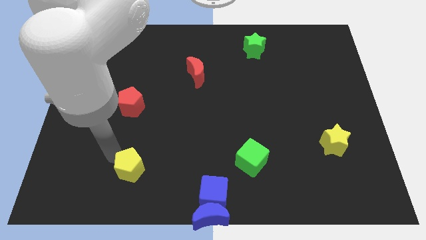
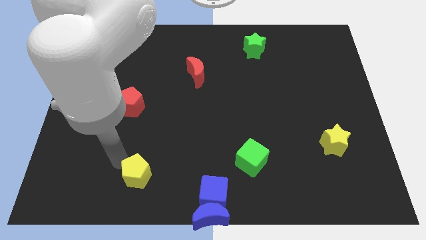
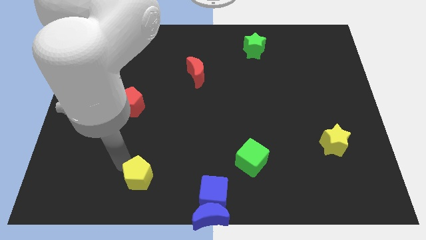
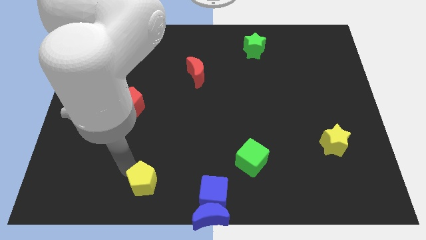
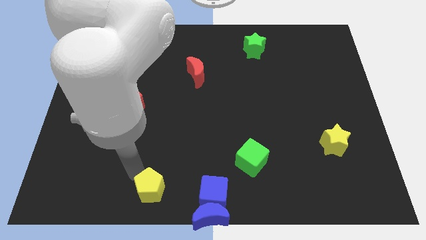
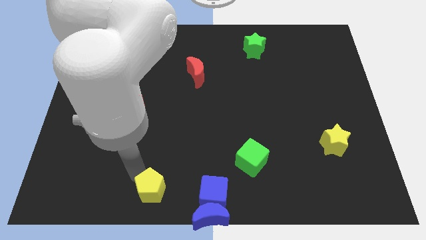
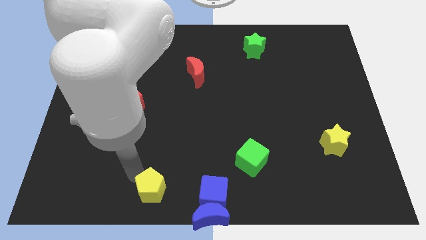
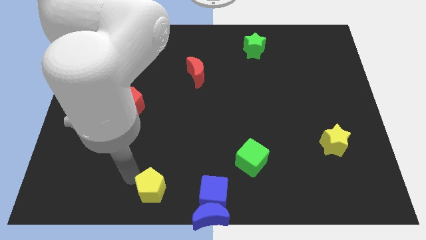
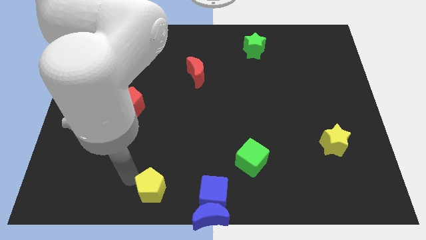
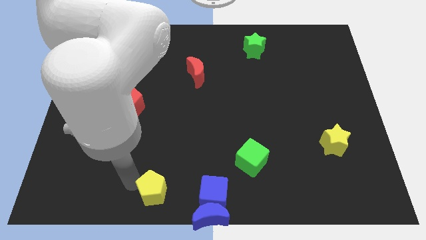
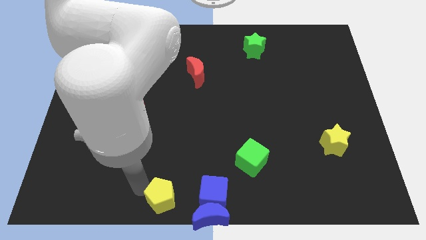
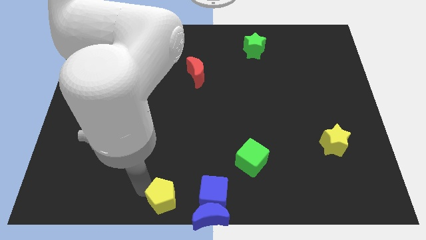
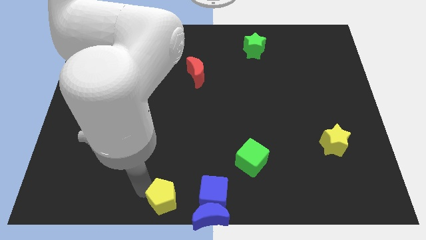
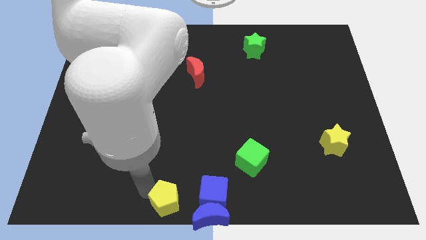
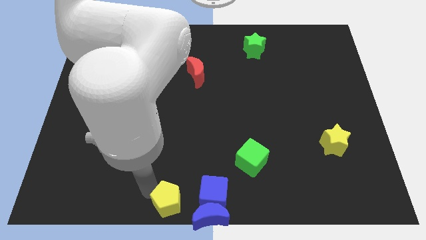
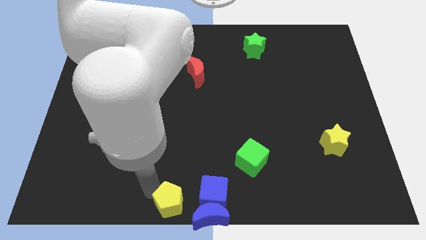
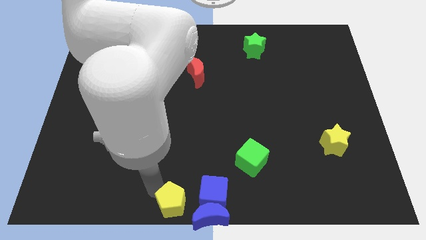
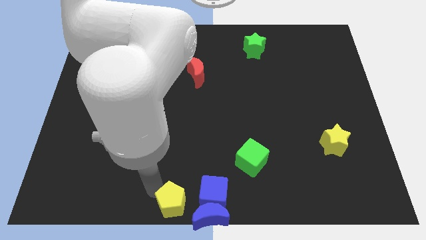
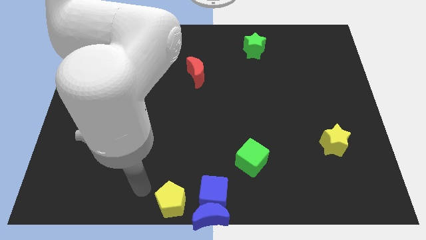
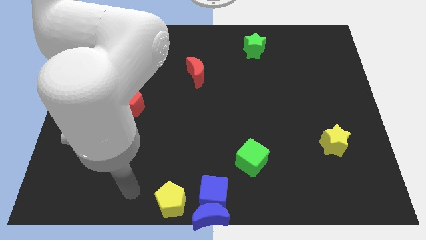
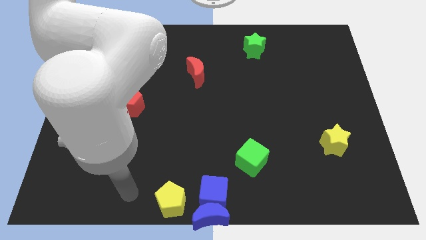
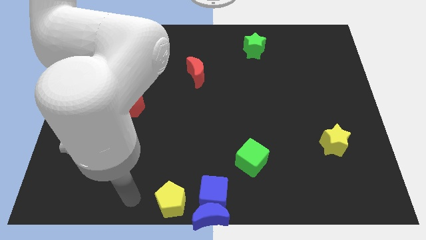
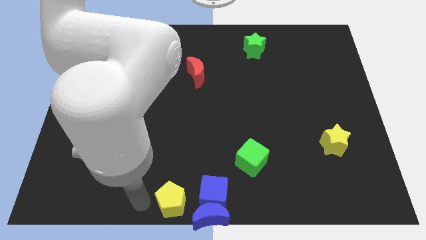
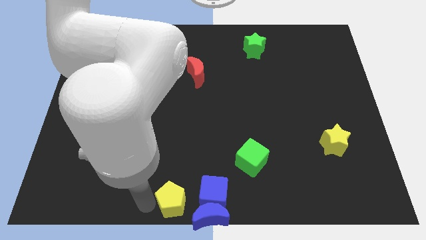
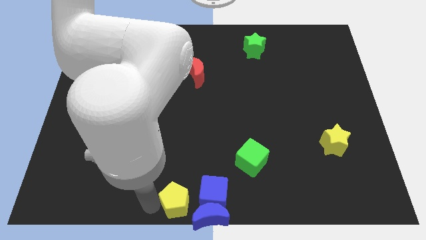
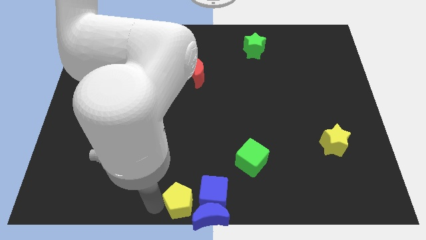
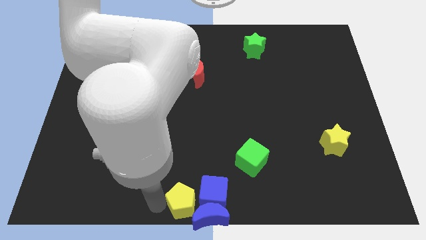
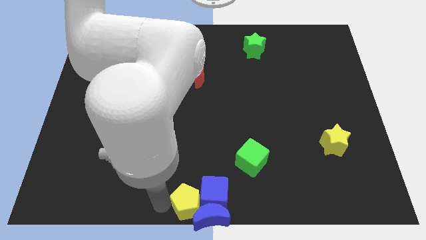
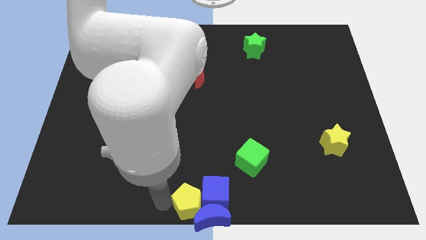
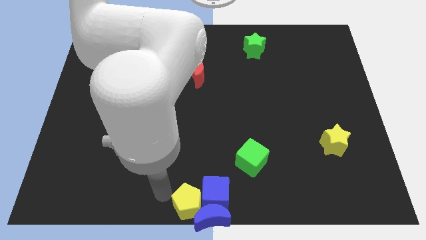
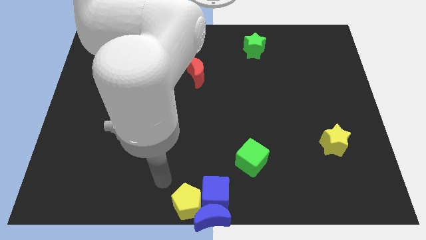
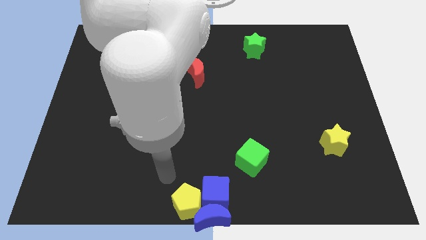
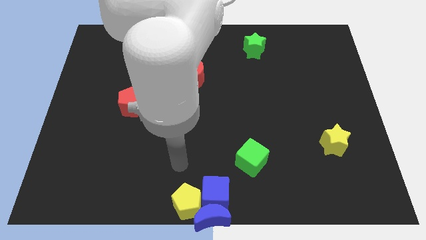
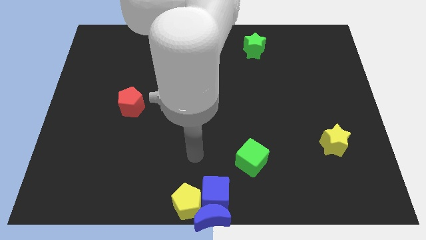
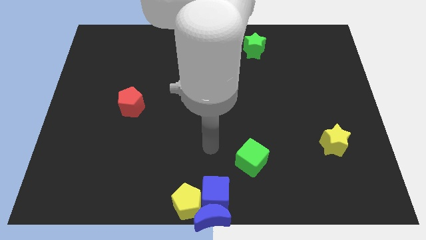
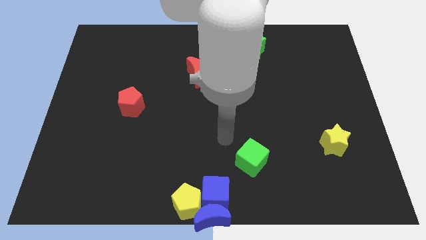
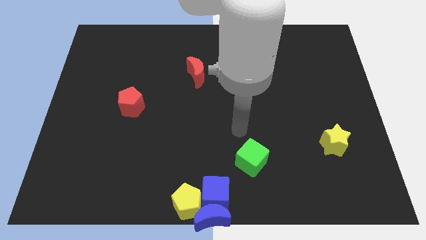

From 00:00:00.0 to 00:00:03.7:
push the yellow pentagon into the blue blocks

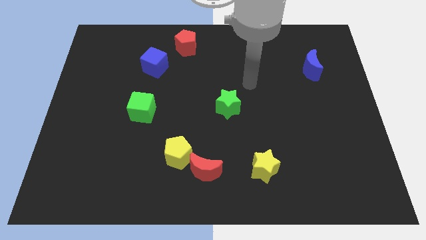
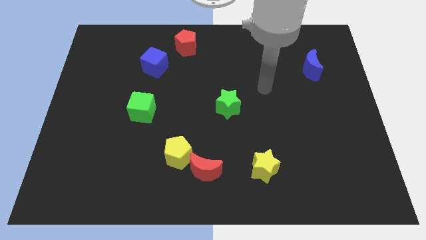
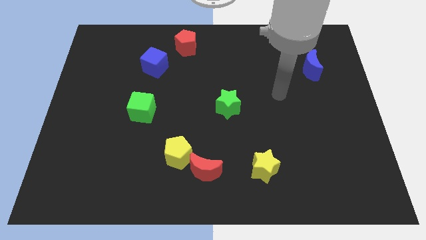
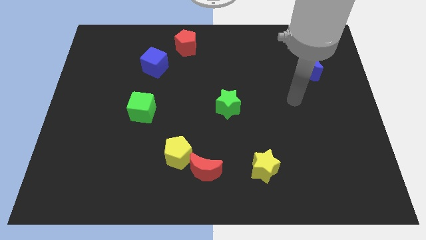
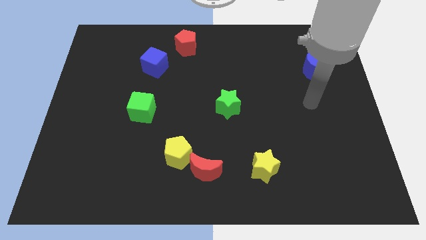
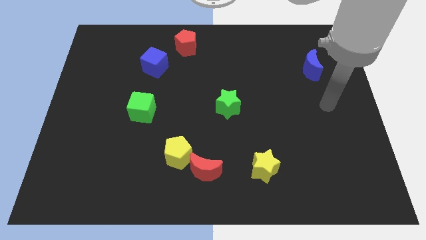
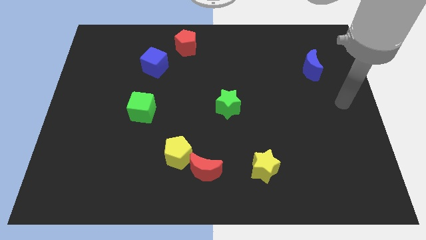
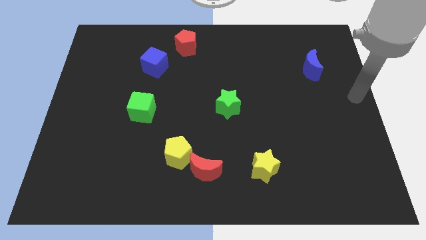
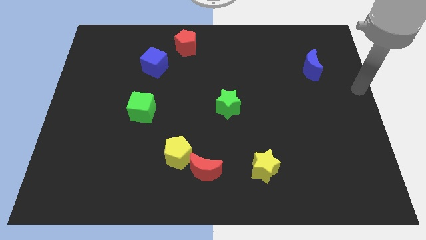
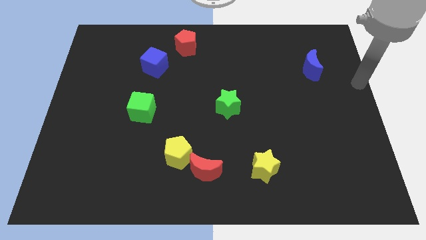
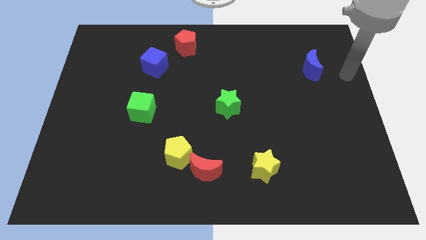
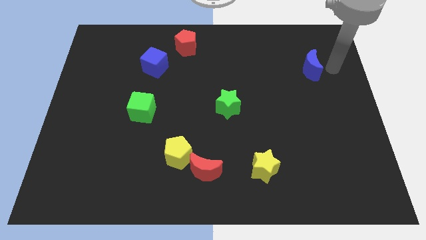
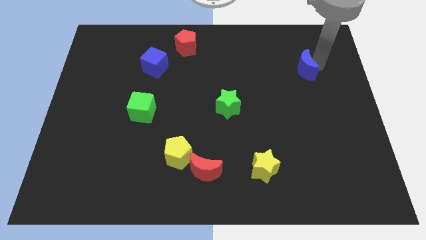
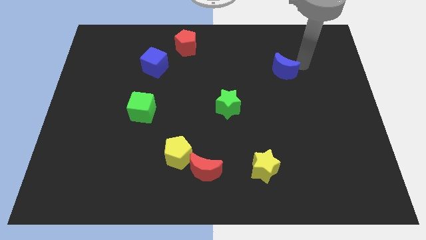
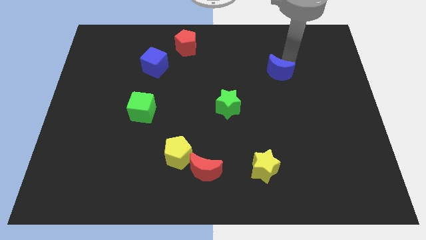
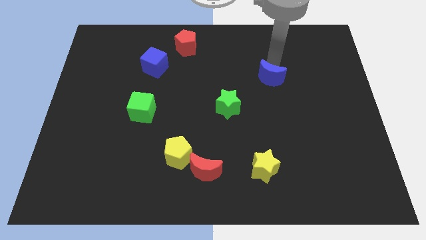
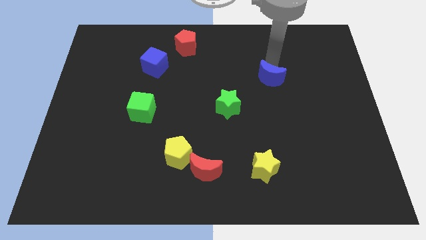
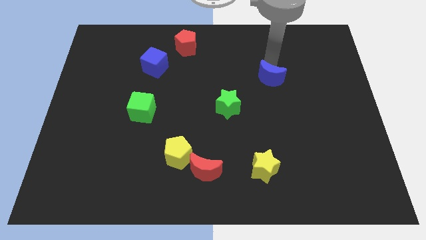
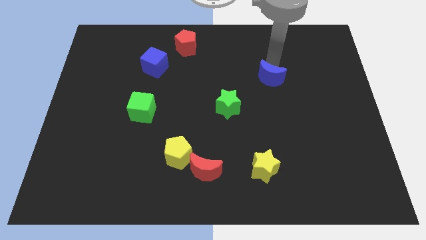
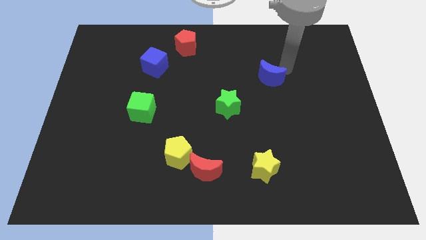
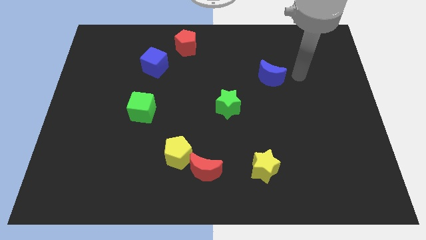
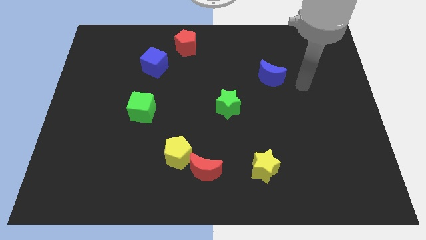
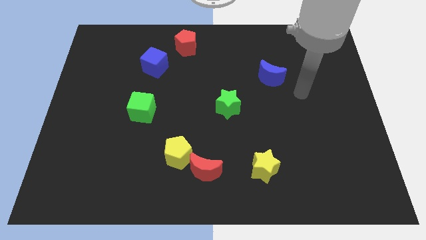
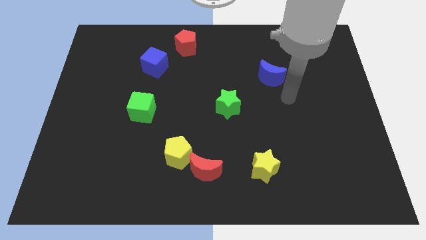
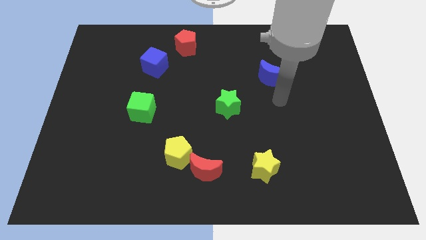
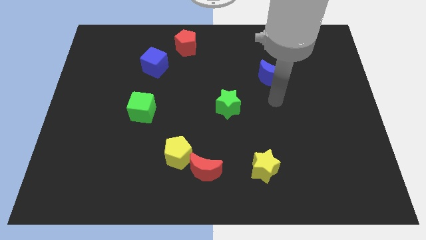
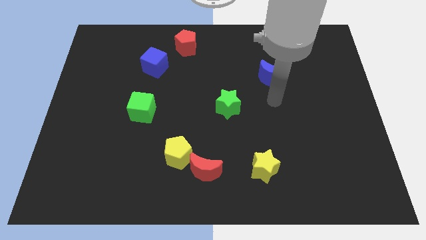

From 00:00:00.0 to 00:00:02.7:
move the blue moon diagonally top right to green star

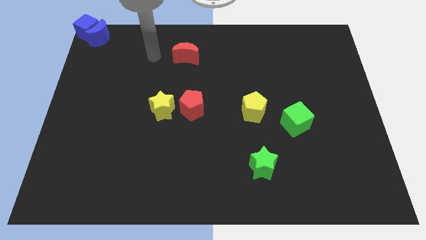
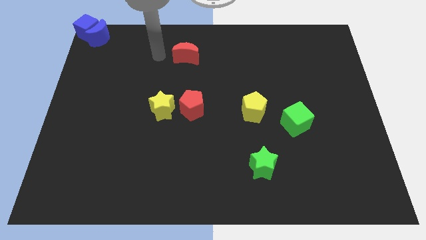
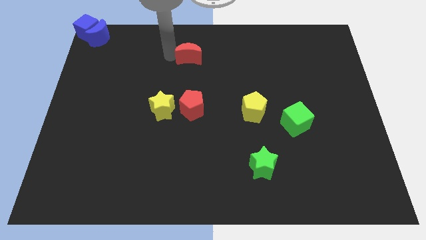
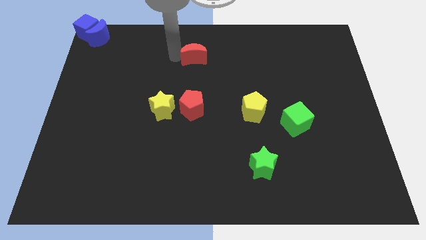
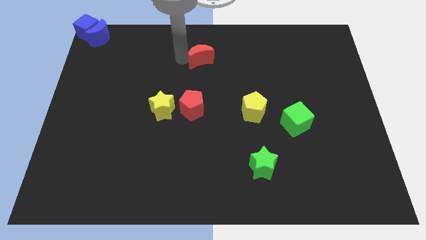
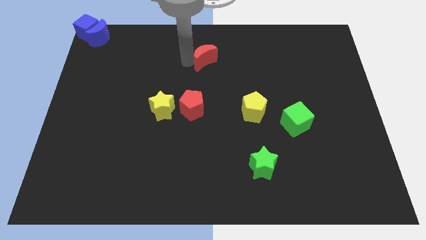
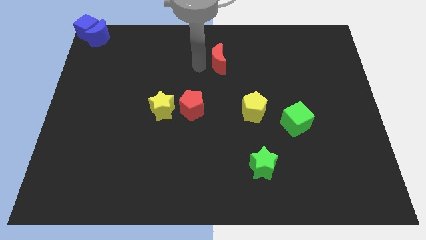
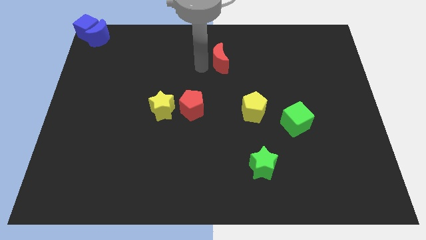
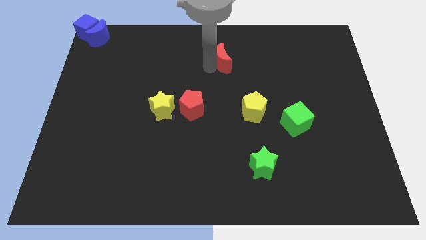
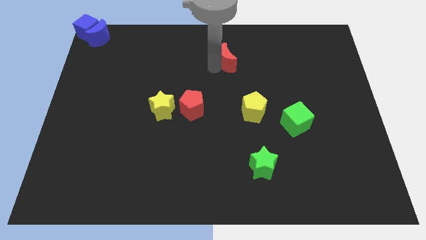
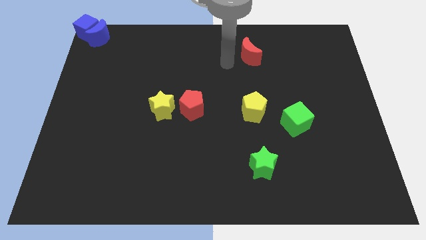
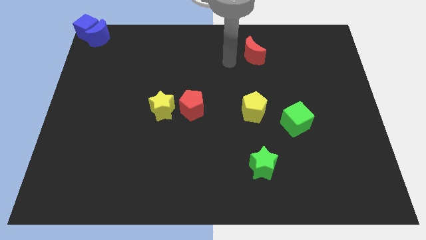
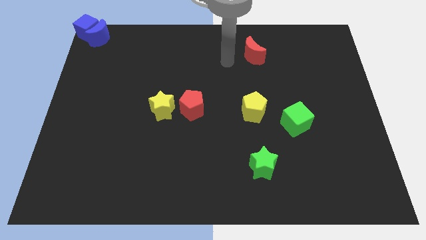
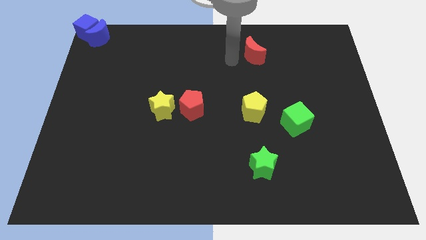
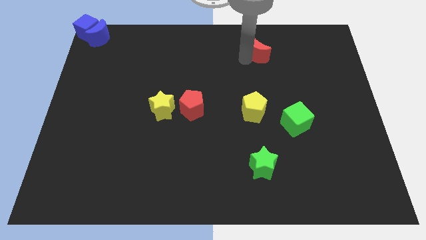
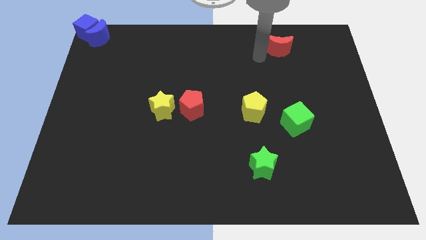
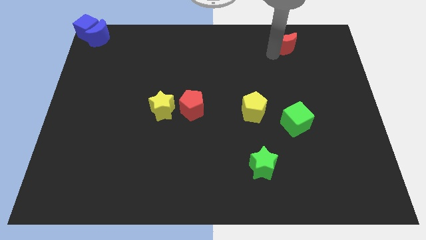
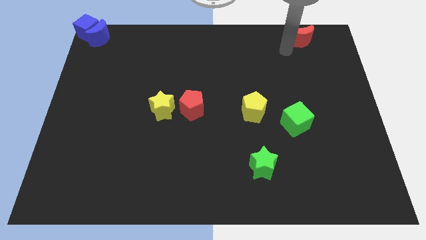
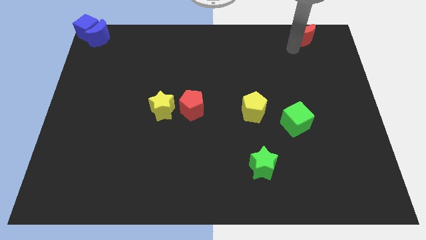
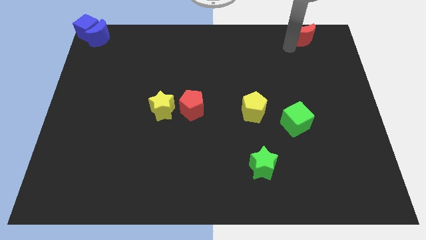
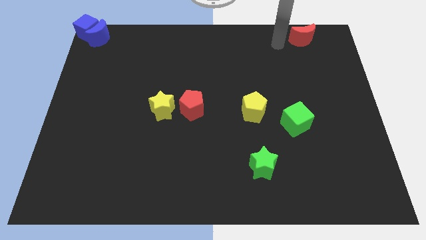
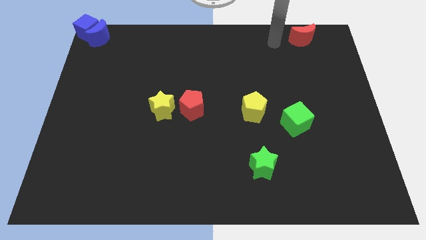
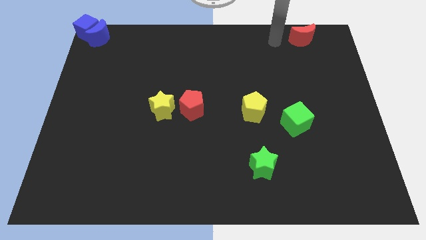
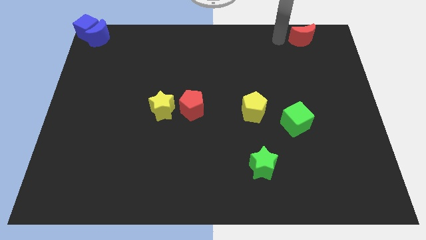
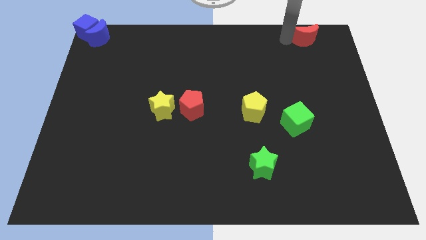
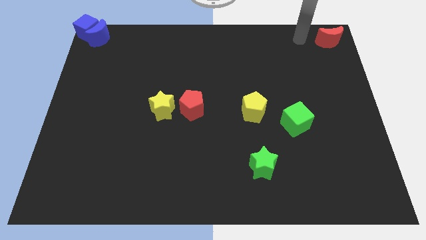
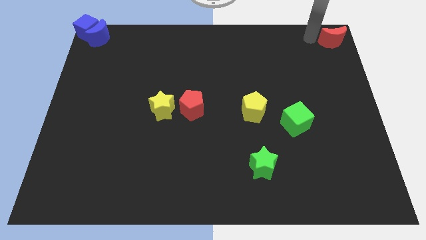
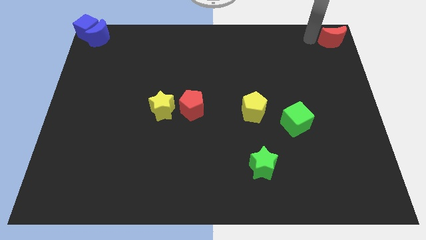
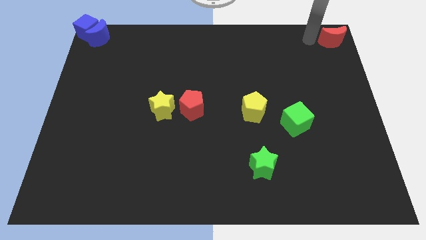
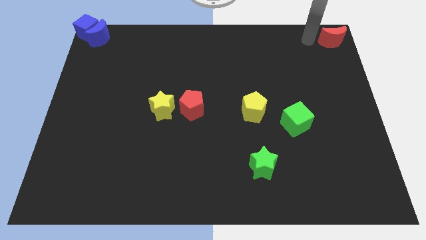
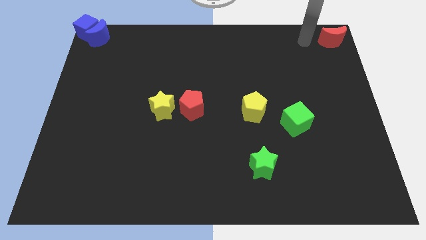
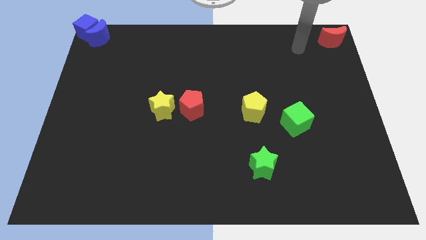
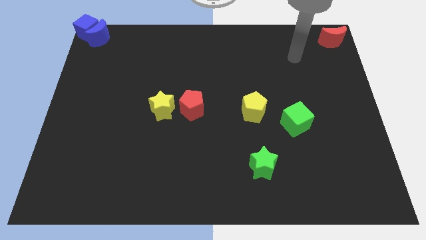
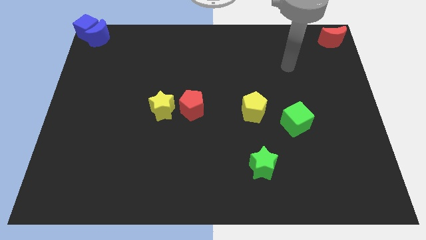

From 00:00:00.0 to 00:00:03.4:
move the red moon to the top right of the board
